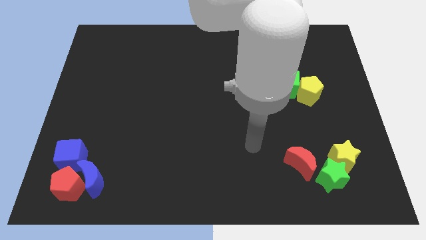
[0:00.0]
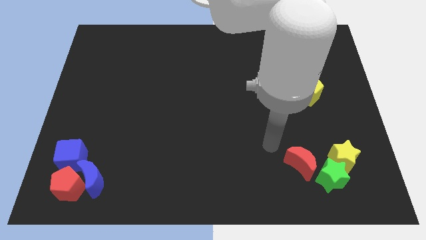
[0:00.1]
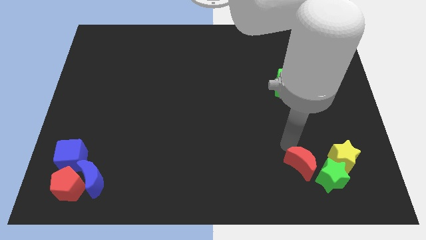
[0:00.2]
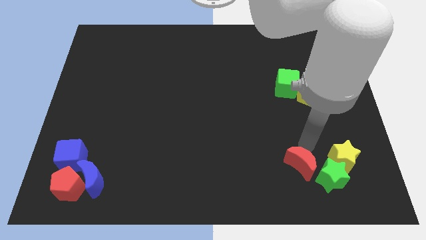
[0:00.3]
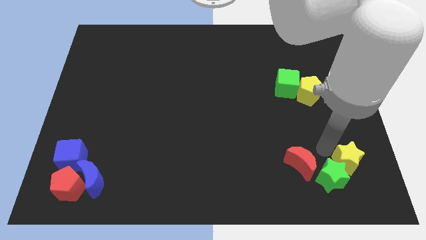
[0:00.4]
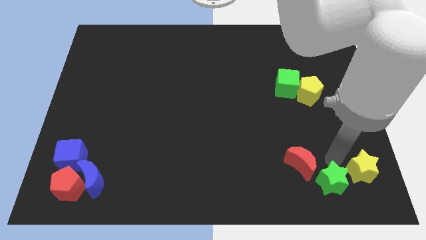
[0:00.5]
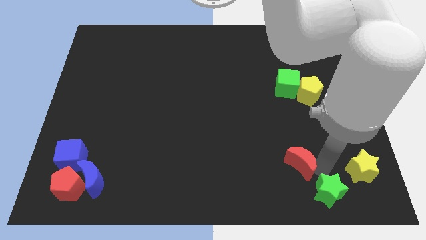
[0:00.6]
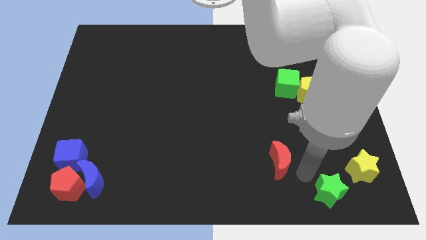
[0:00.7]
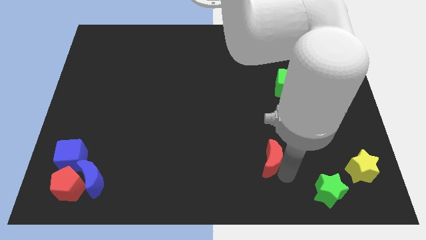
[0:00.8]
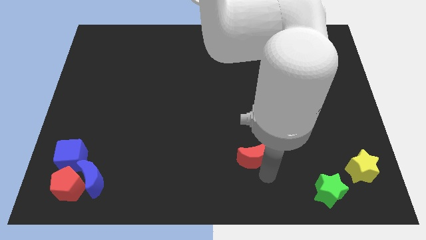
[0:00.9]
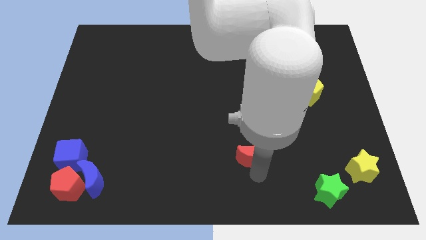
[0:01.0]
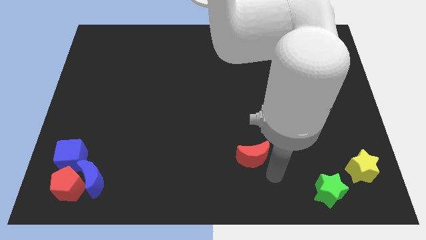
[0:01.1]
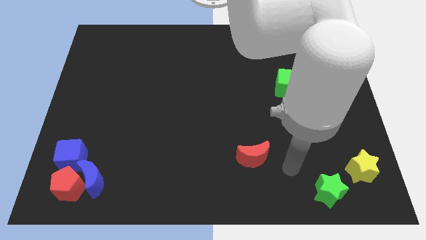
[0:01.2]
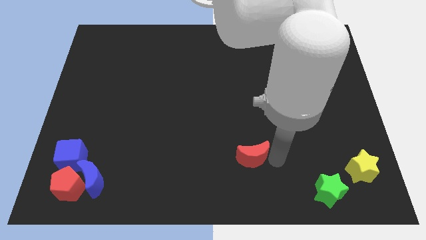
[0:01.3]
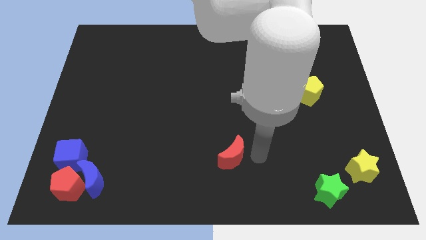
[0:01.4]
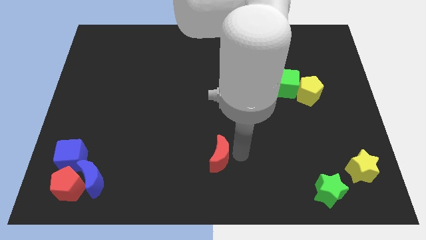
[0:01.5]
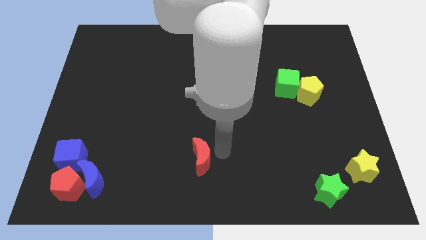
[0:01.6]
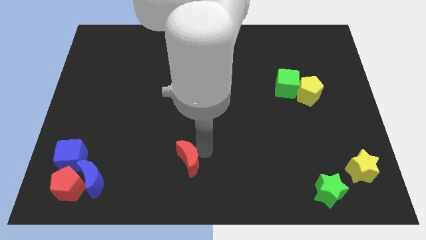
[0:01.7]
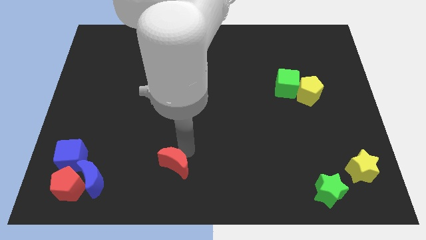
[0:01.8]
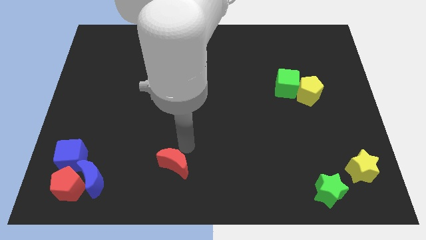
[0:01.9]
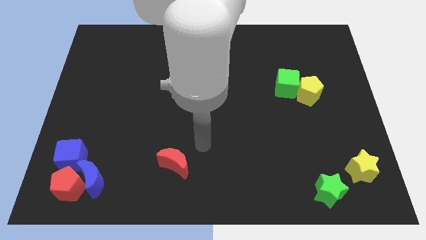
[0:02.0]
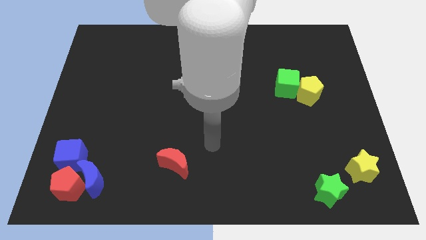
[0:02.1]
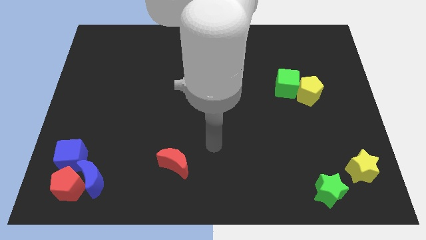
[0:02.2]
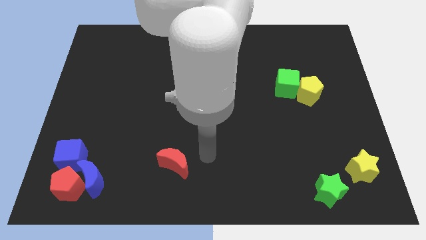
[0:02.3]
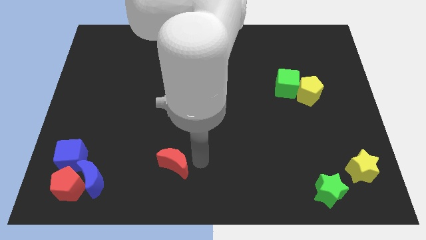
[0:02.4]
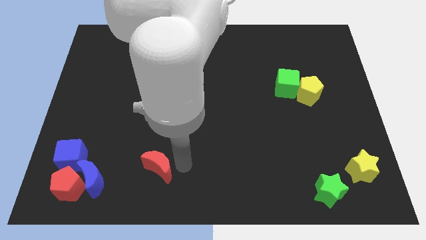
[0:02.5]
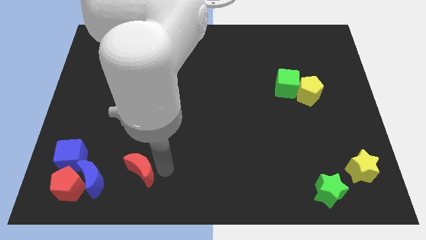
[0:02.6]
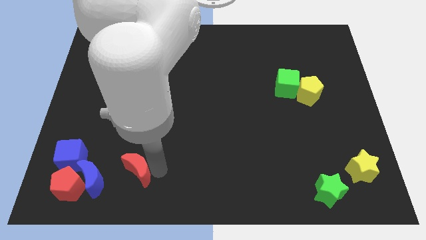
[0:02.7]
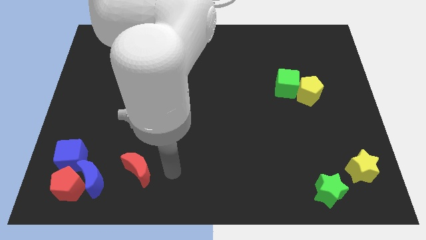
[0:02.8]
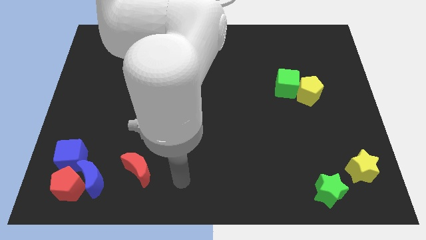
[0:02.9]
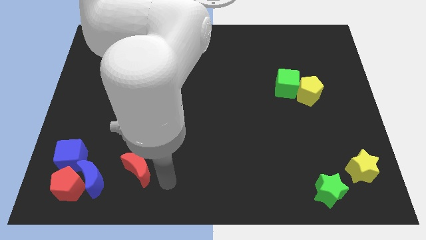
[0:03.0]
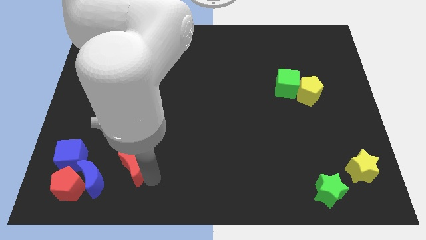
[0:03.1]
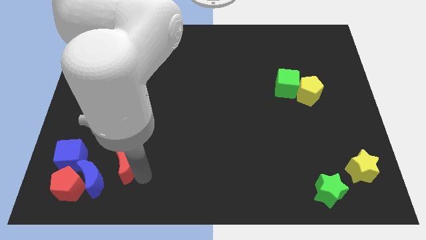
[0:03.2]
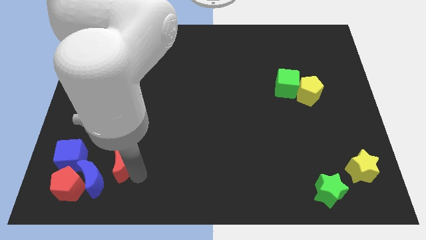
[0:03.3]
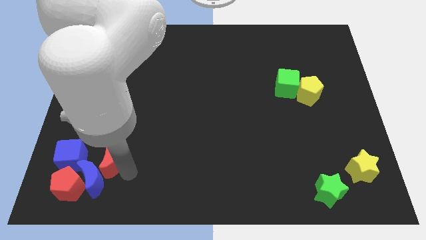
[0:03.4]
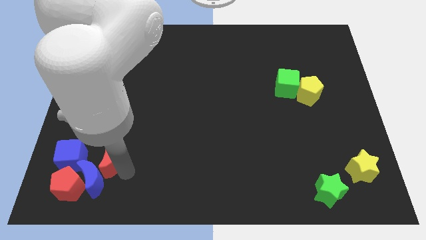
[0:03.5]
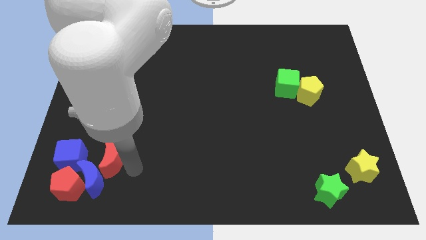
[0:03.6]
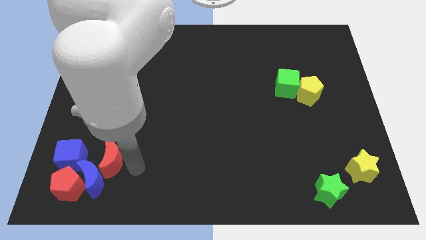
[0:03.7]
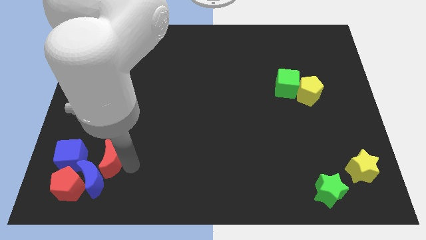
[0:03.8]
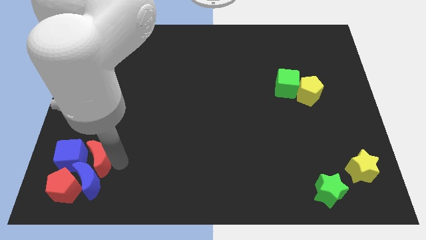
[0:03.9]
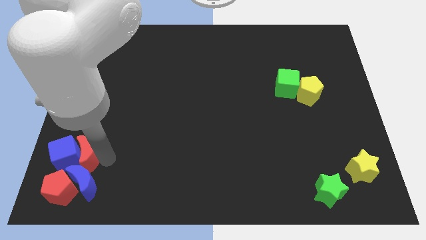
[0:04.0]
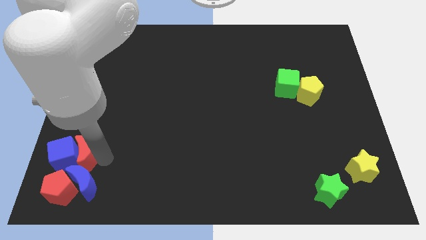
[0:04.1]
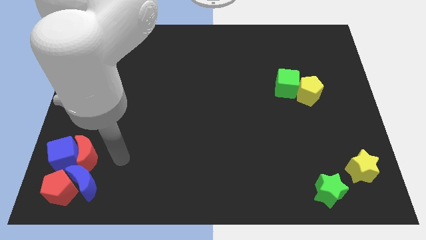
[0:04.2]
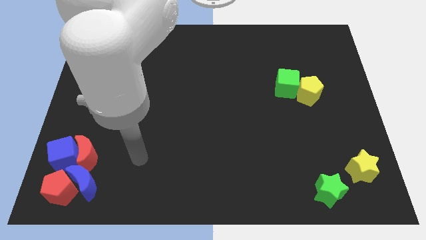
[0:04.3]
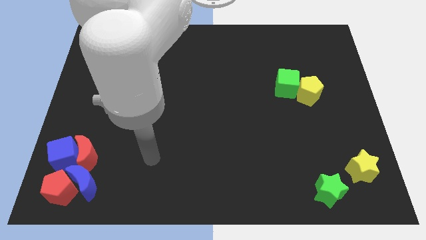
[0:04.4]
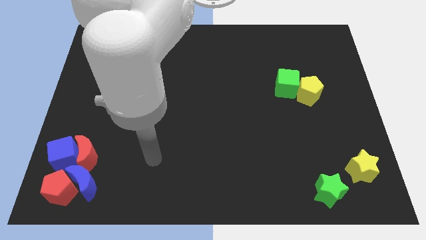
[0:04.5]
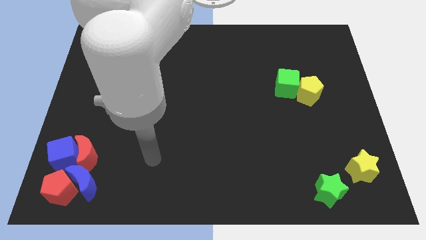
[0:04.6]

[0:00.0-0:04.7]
move red moon into the right of the blue cube

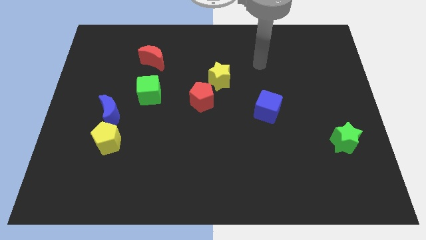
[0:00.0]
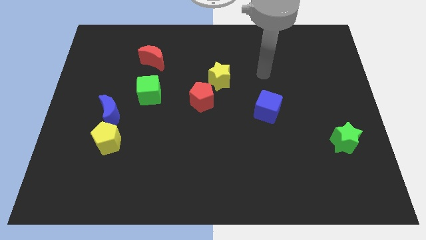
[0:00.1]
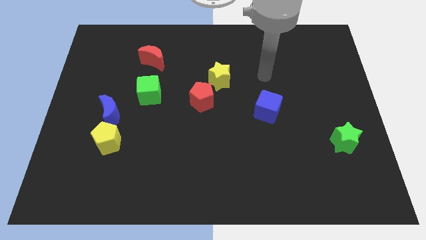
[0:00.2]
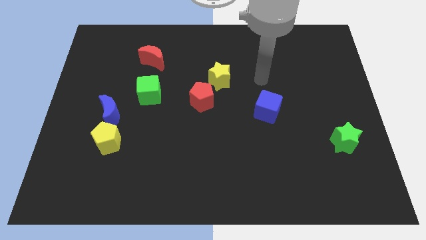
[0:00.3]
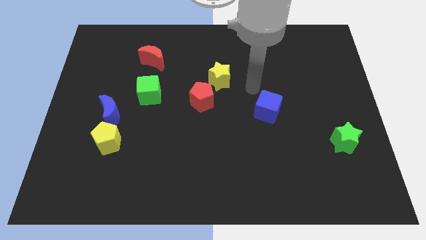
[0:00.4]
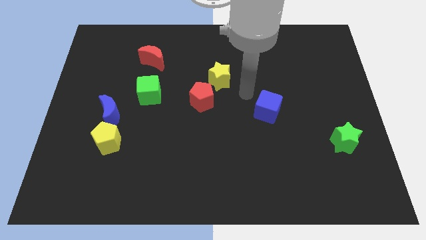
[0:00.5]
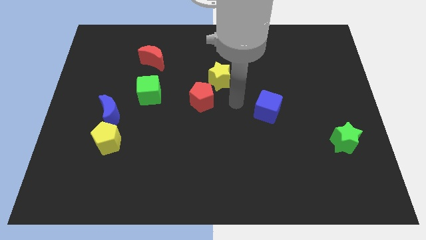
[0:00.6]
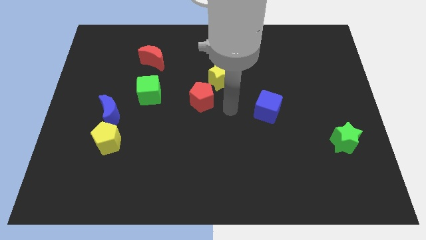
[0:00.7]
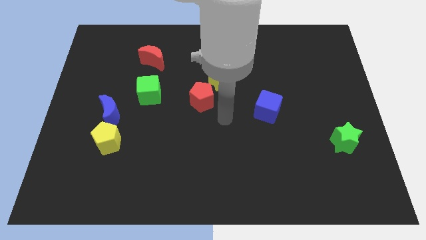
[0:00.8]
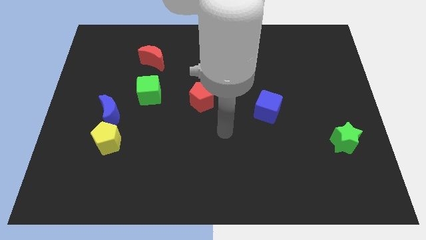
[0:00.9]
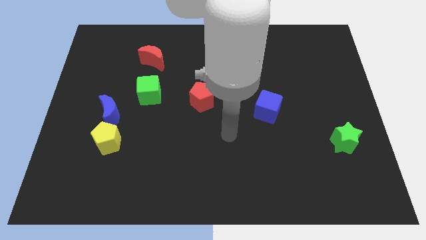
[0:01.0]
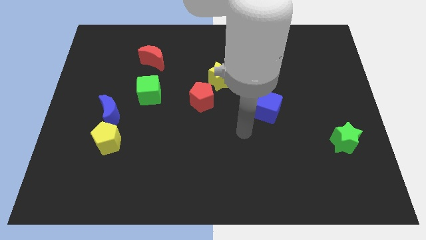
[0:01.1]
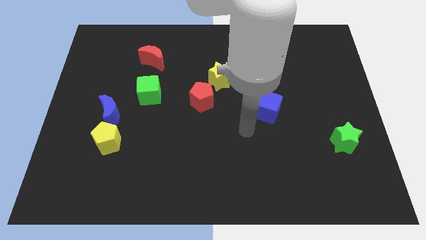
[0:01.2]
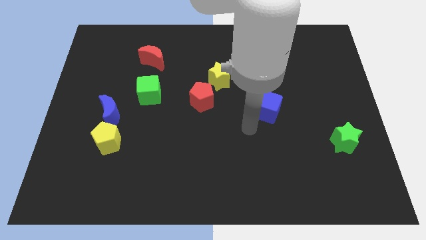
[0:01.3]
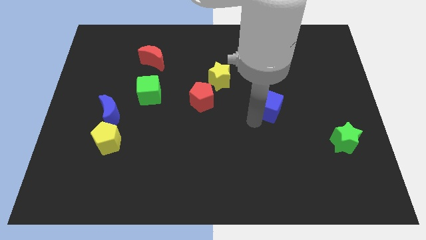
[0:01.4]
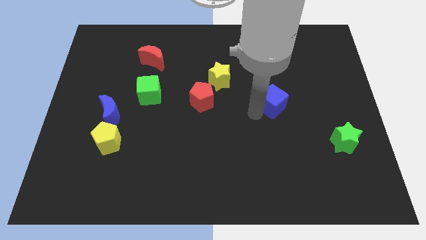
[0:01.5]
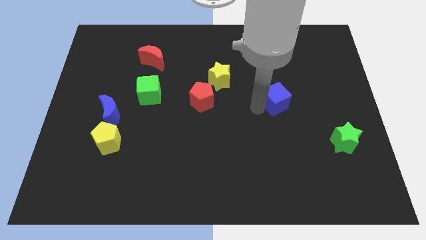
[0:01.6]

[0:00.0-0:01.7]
touch at the bottom left side of the blue cube

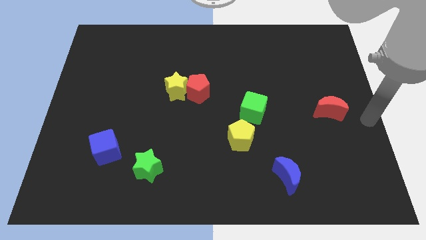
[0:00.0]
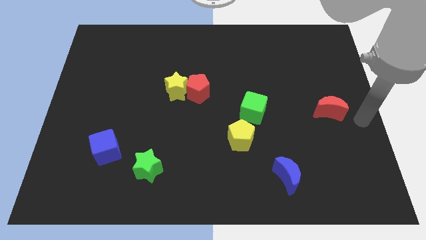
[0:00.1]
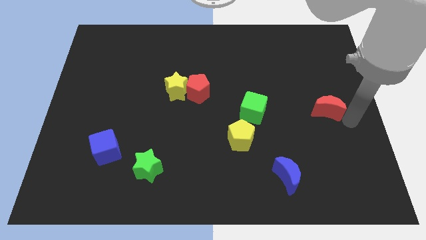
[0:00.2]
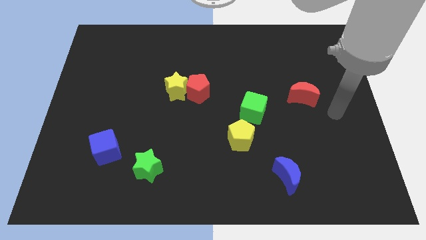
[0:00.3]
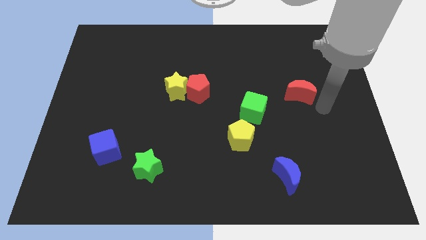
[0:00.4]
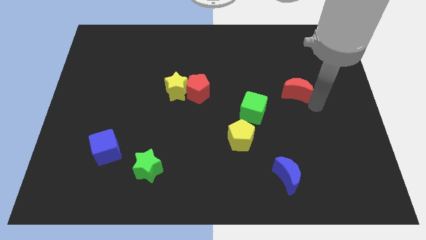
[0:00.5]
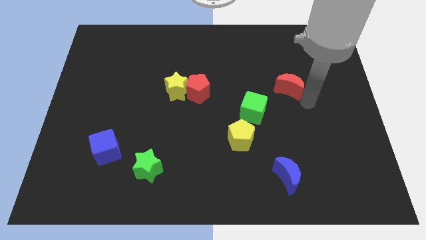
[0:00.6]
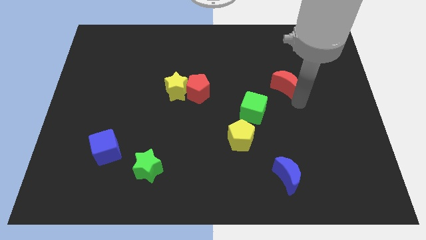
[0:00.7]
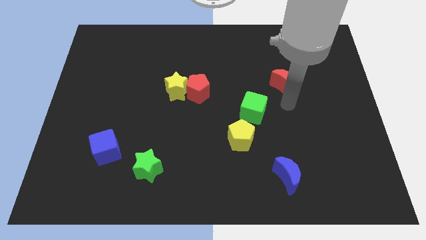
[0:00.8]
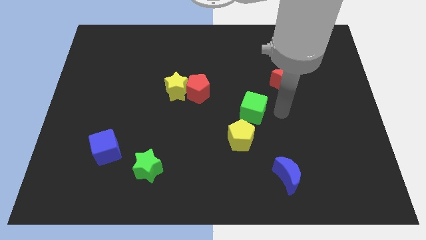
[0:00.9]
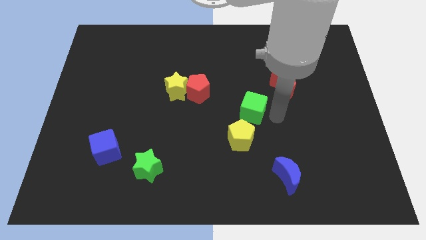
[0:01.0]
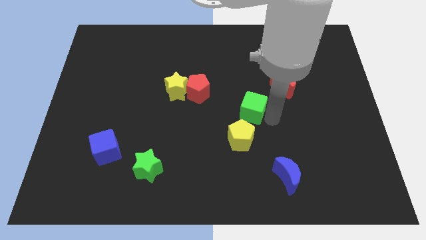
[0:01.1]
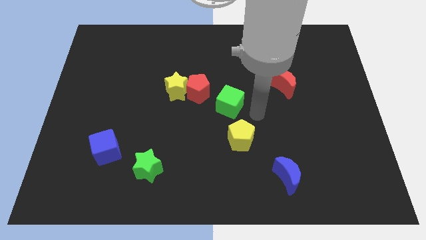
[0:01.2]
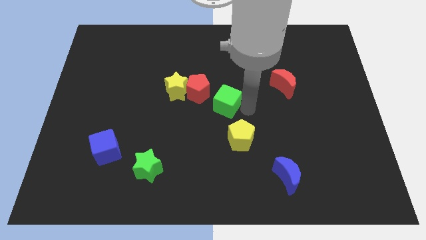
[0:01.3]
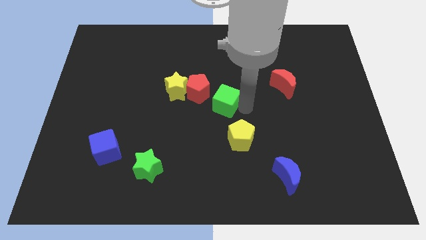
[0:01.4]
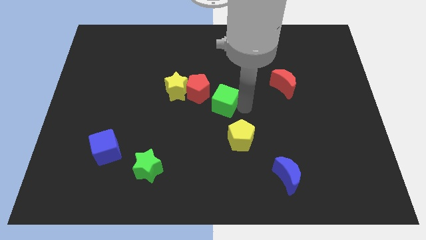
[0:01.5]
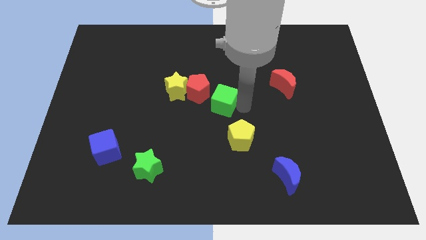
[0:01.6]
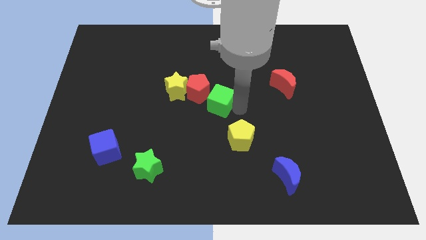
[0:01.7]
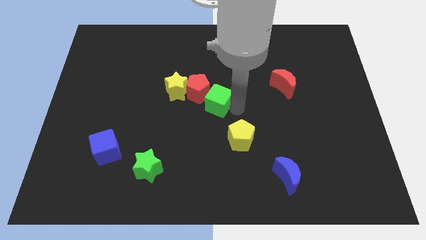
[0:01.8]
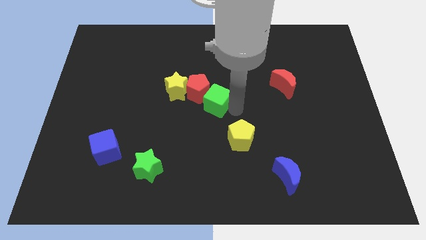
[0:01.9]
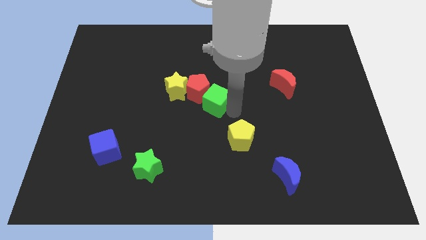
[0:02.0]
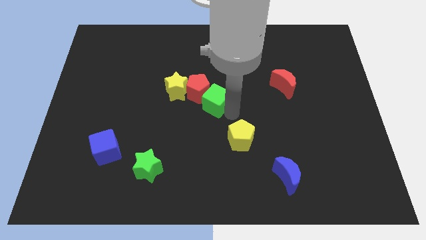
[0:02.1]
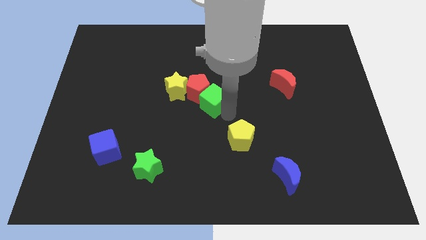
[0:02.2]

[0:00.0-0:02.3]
move green cube right beside the red pentagon

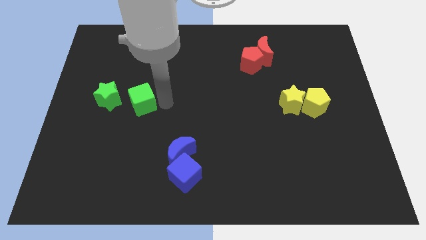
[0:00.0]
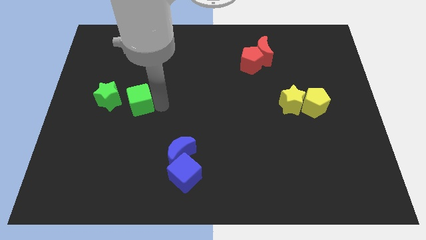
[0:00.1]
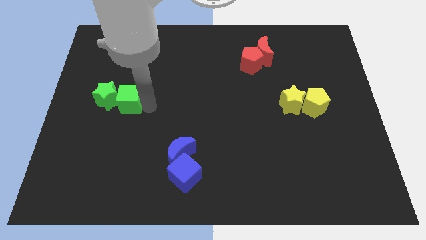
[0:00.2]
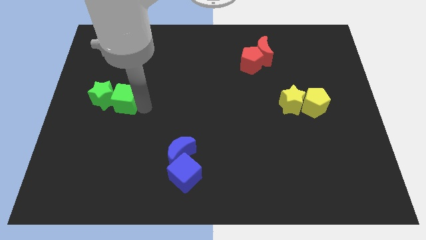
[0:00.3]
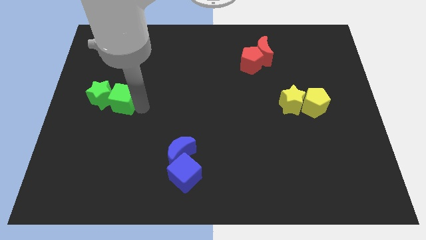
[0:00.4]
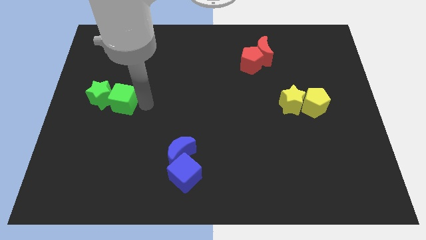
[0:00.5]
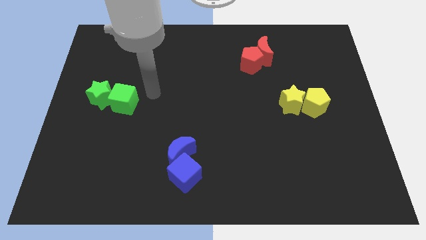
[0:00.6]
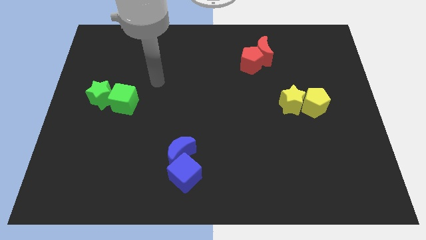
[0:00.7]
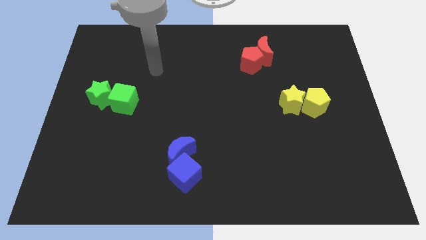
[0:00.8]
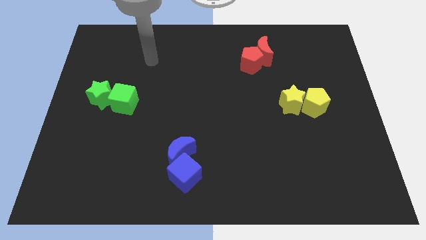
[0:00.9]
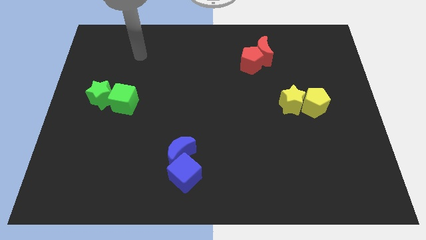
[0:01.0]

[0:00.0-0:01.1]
move your arm towards the top left corner
